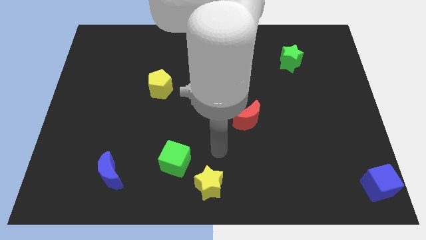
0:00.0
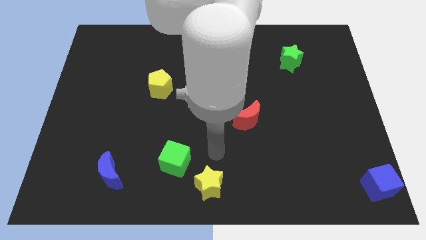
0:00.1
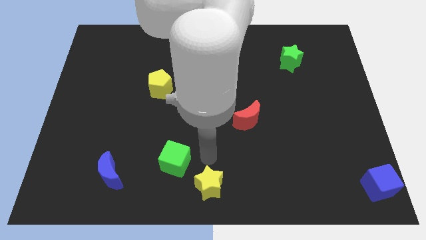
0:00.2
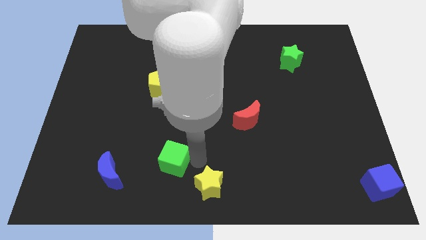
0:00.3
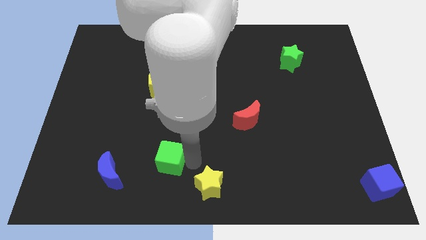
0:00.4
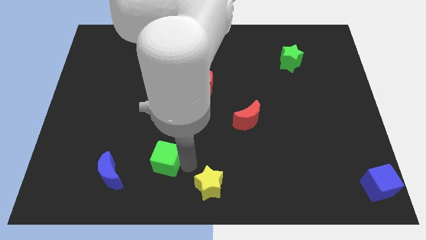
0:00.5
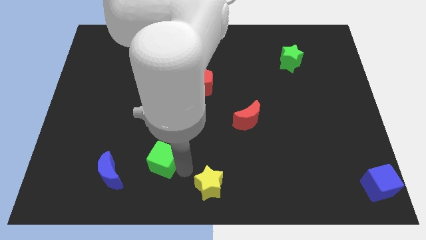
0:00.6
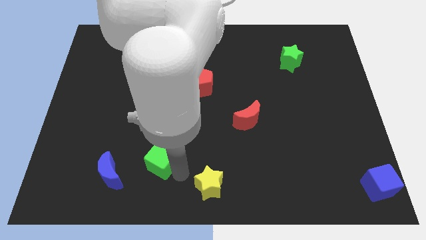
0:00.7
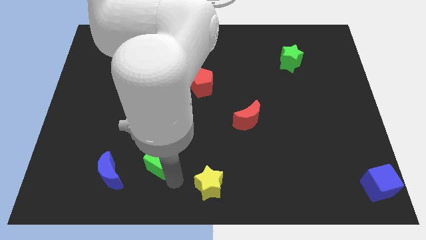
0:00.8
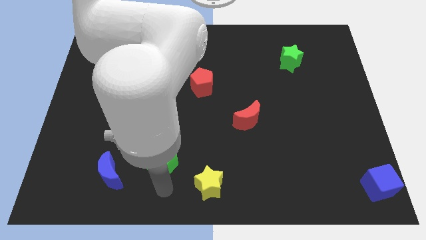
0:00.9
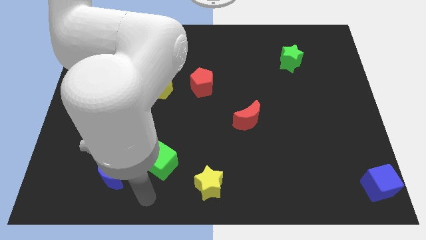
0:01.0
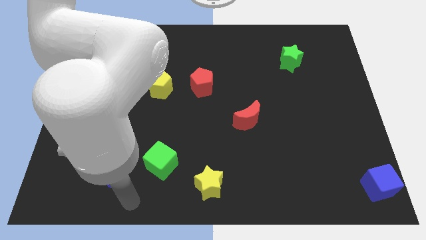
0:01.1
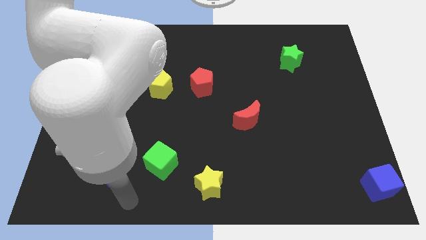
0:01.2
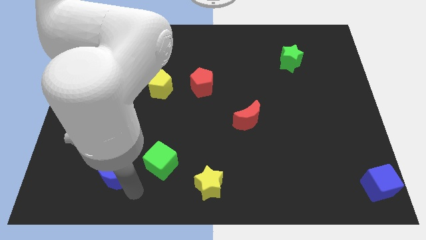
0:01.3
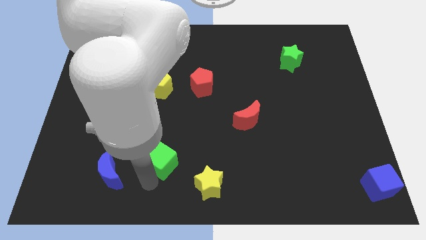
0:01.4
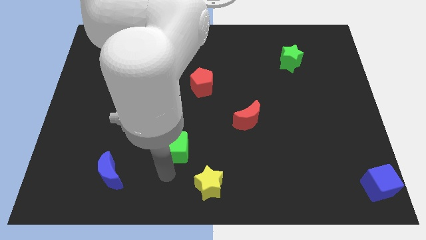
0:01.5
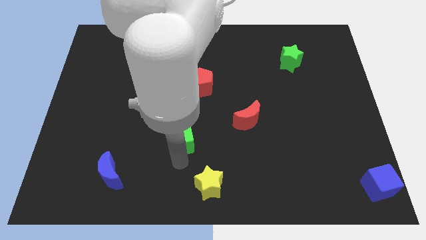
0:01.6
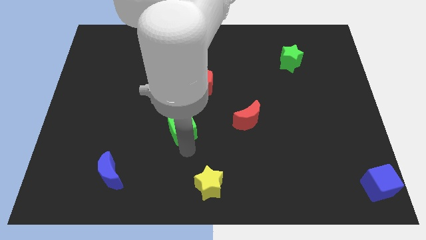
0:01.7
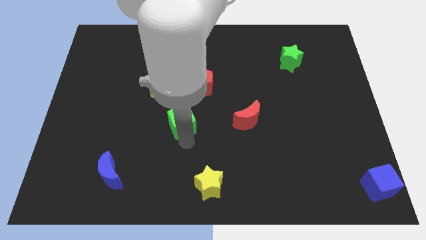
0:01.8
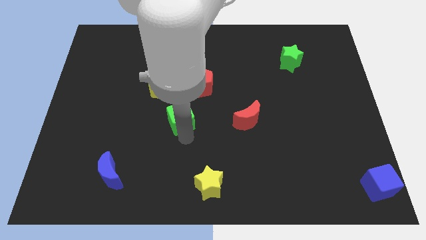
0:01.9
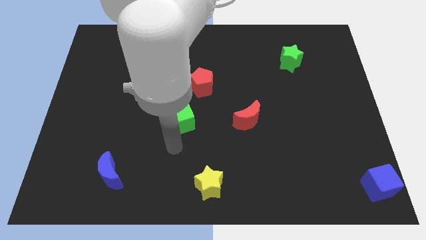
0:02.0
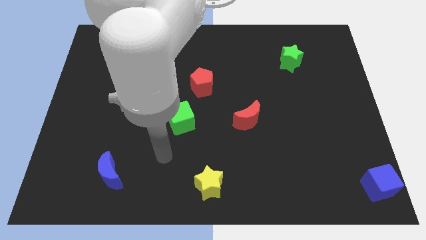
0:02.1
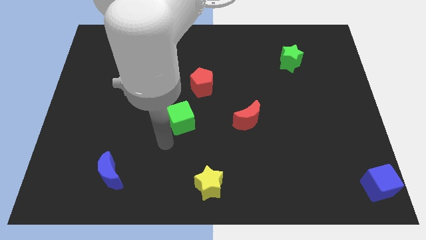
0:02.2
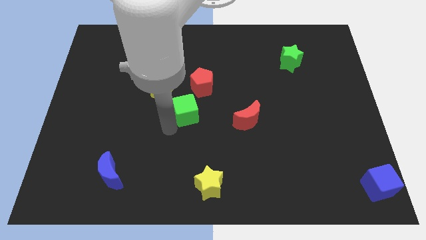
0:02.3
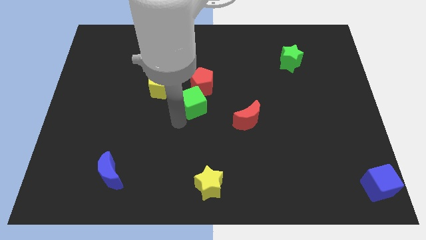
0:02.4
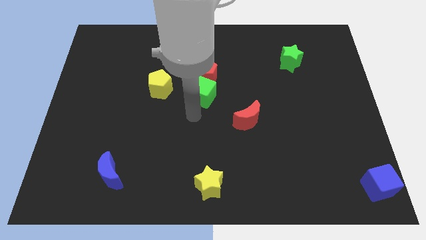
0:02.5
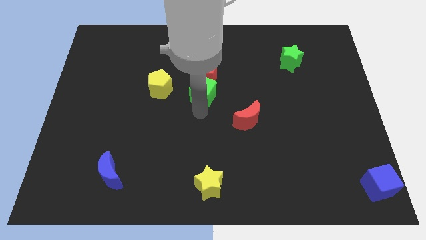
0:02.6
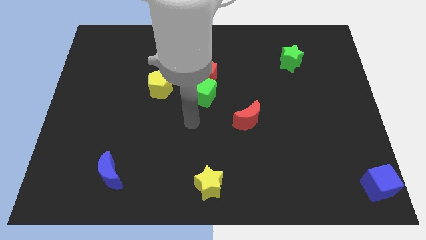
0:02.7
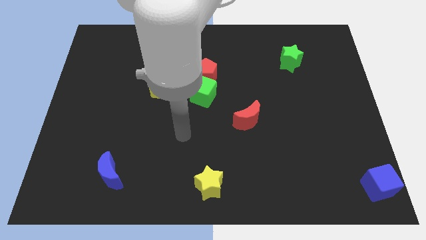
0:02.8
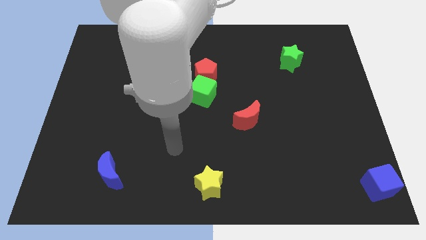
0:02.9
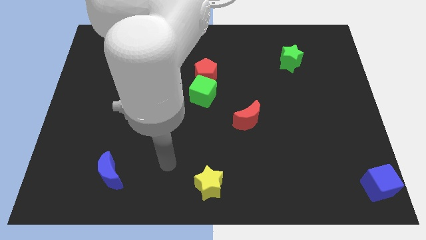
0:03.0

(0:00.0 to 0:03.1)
move the green cube to the bottom of the red pentagon

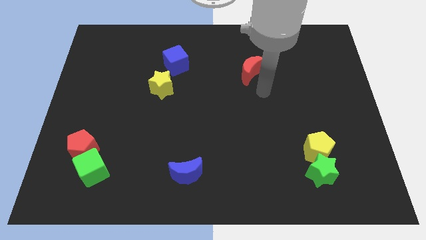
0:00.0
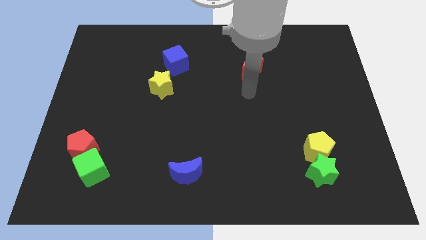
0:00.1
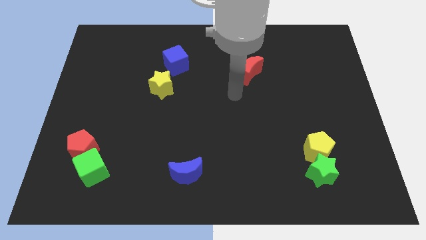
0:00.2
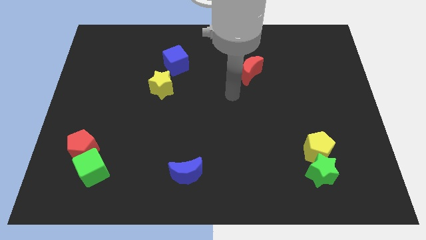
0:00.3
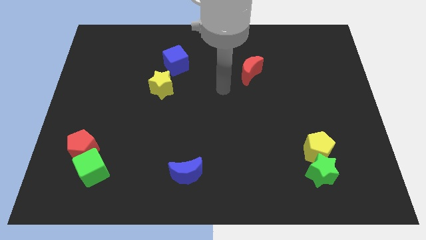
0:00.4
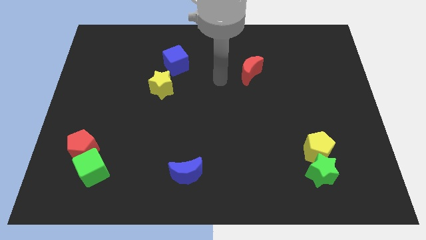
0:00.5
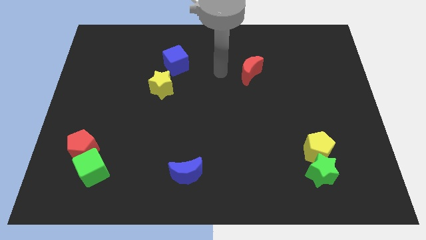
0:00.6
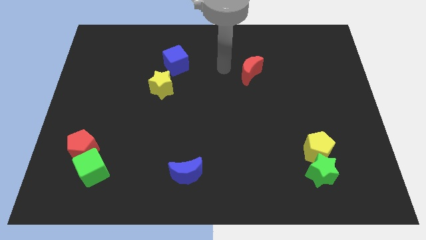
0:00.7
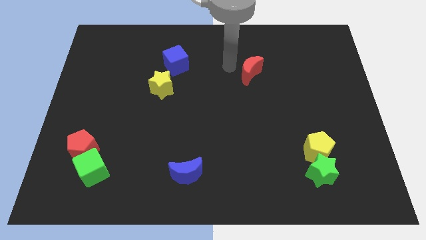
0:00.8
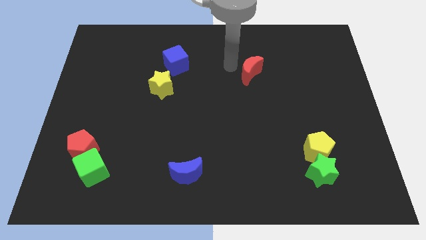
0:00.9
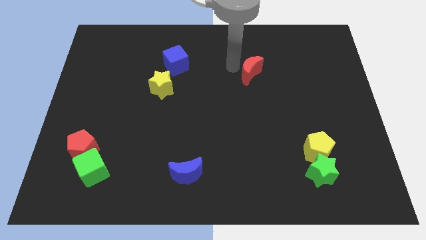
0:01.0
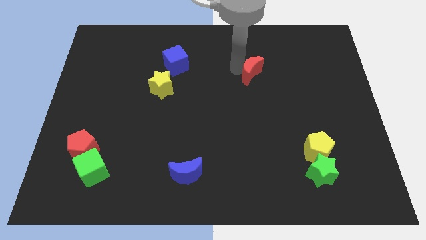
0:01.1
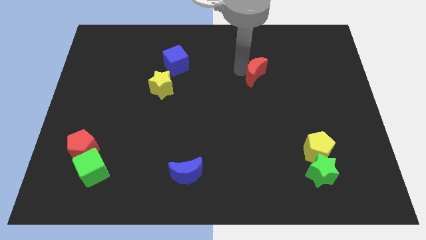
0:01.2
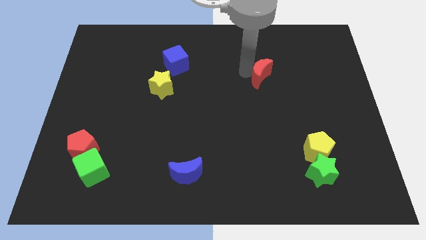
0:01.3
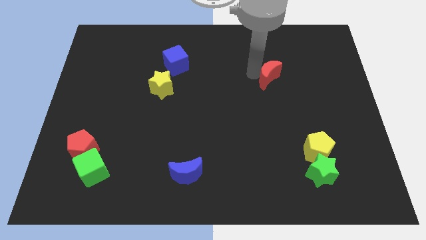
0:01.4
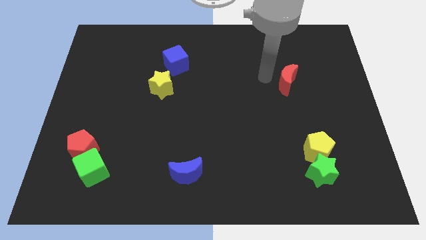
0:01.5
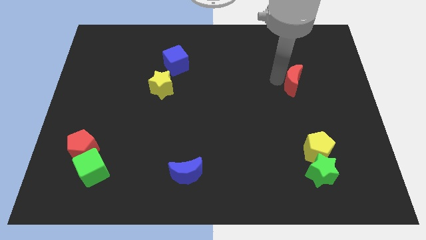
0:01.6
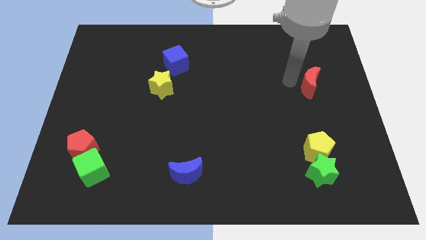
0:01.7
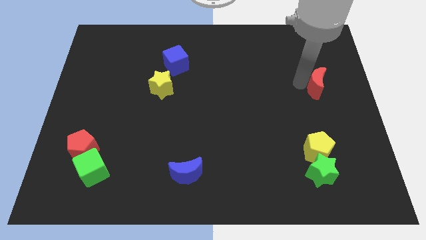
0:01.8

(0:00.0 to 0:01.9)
push the red crescent to the right side of the board

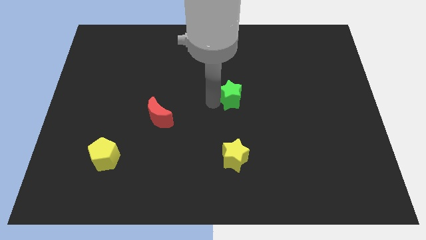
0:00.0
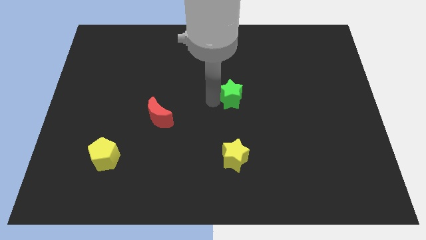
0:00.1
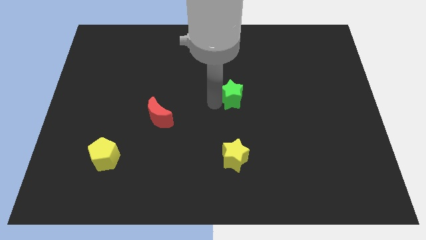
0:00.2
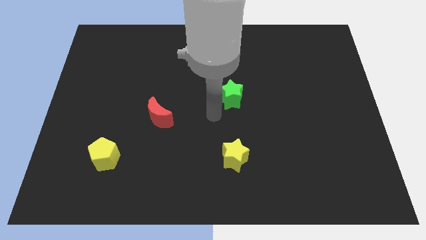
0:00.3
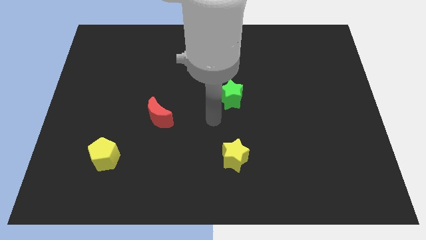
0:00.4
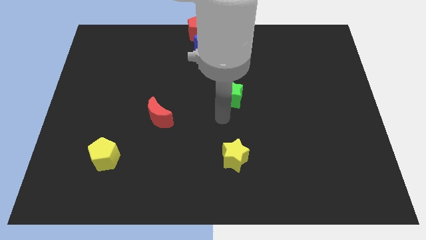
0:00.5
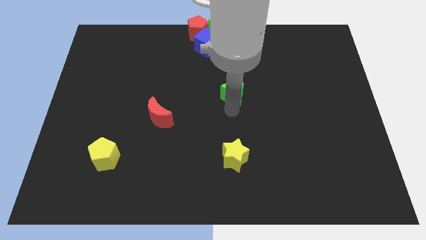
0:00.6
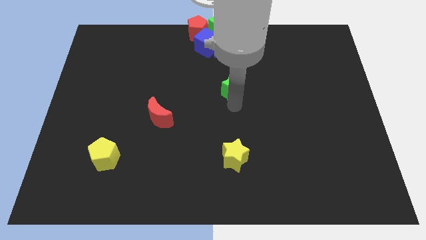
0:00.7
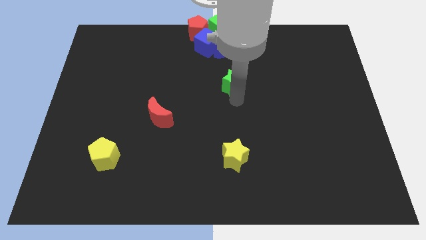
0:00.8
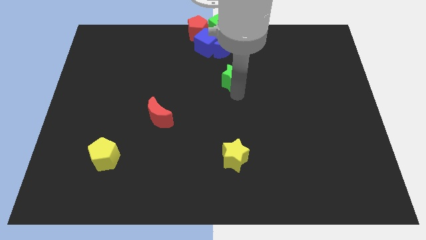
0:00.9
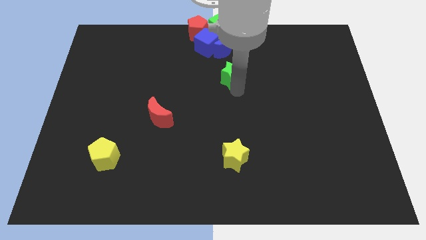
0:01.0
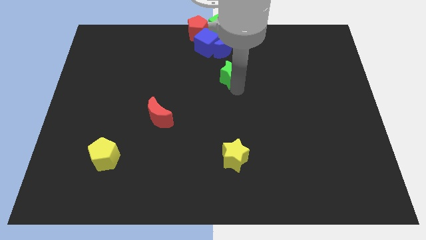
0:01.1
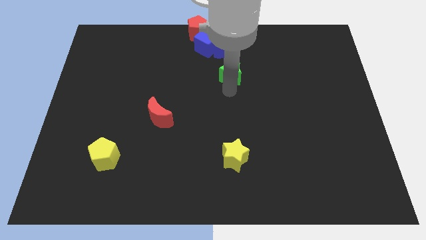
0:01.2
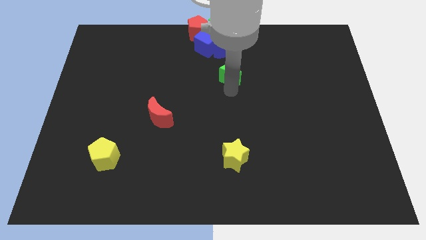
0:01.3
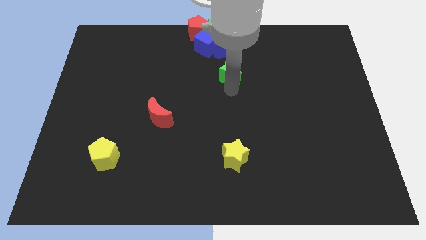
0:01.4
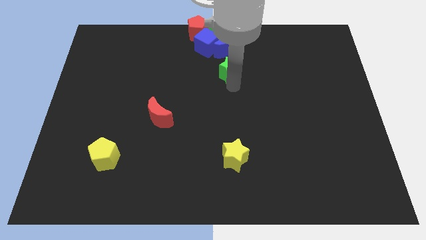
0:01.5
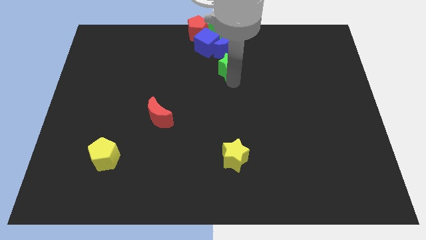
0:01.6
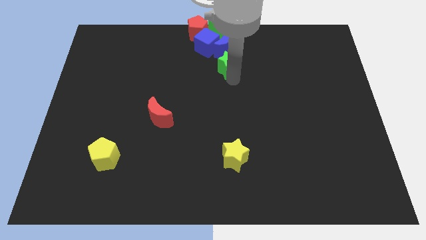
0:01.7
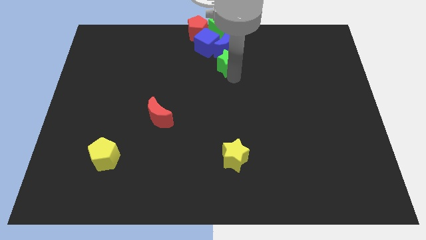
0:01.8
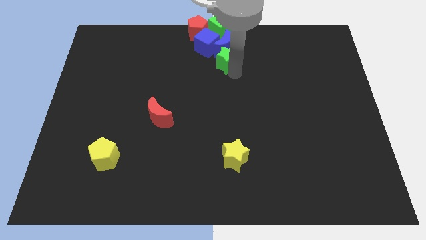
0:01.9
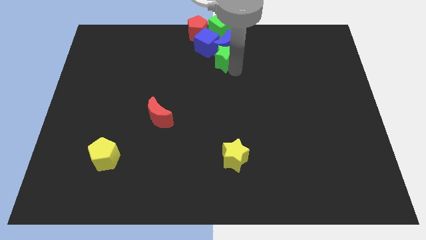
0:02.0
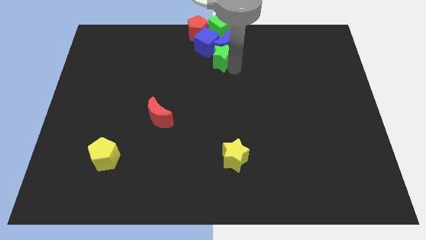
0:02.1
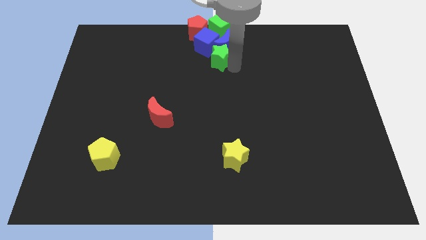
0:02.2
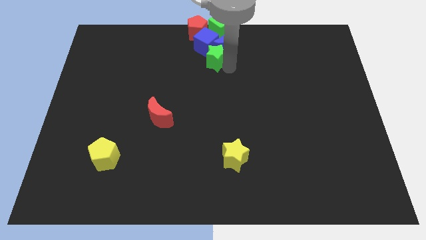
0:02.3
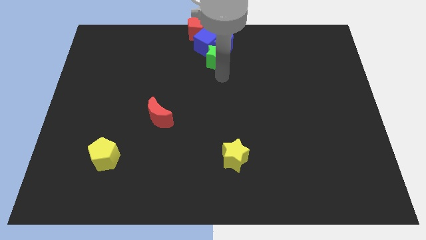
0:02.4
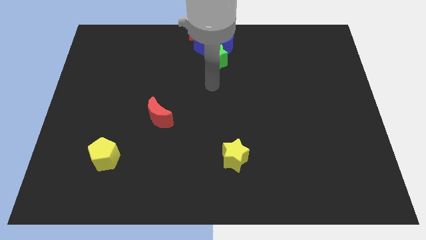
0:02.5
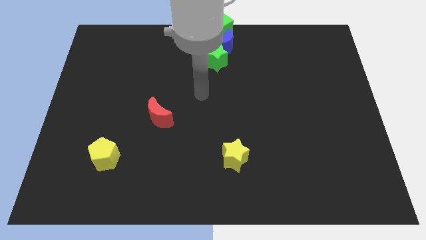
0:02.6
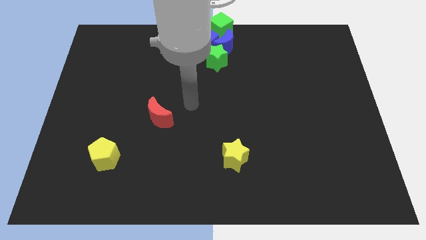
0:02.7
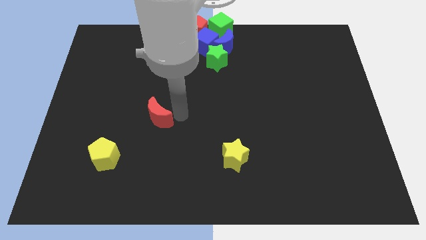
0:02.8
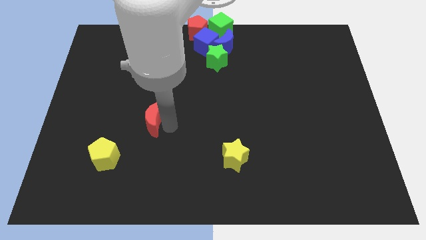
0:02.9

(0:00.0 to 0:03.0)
push the green star into the group of blocks

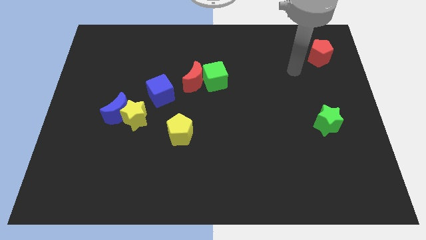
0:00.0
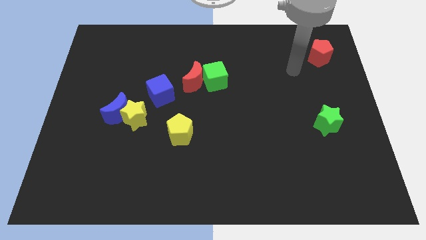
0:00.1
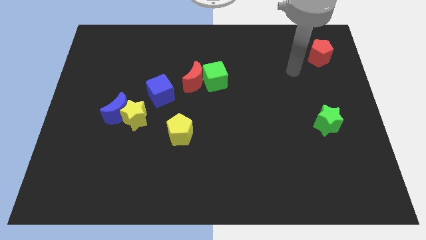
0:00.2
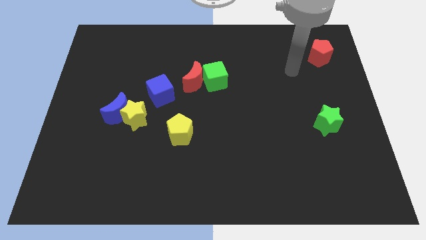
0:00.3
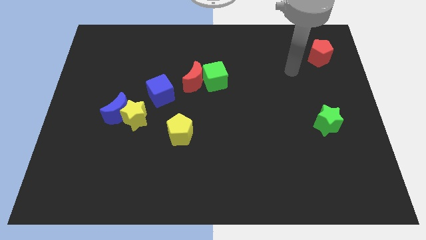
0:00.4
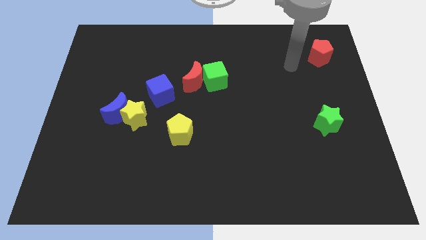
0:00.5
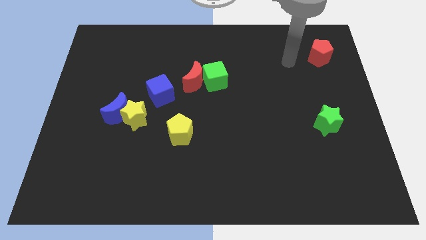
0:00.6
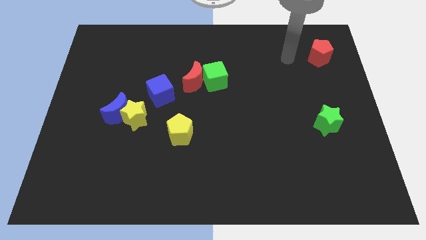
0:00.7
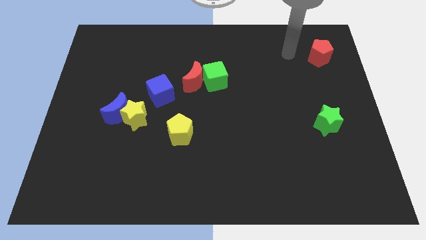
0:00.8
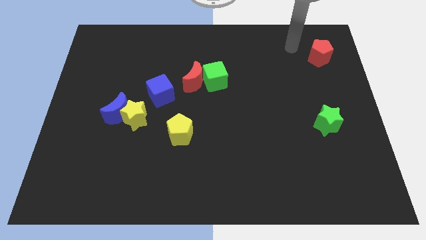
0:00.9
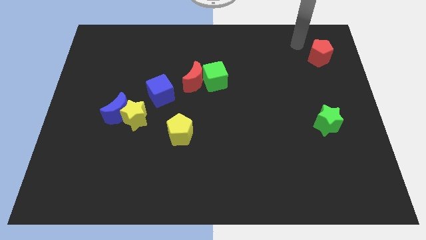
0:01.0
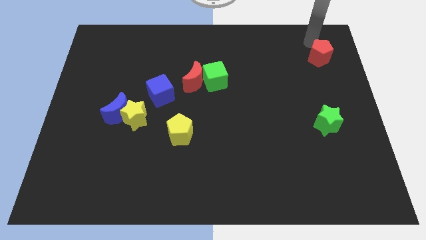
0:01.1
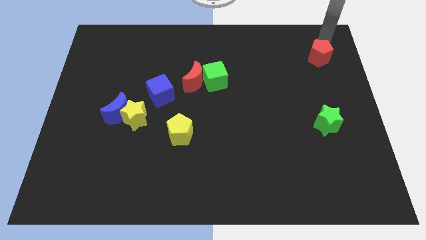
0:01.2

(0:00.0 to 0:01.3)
point your arm at the top of the red pentagon
